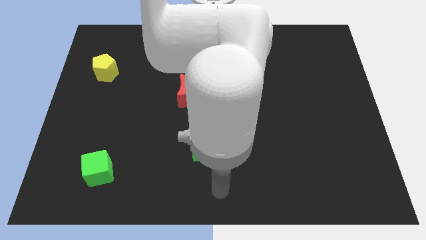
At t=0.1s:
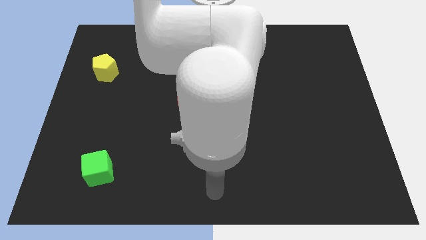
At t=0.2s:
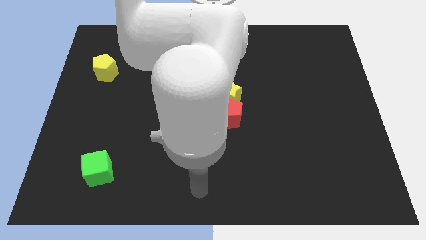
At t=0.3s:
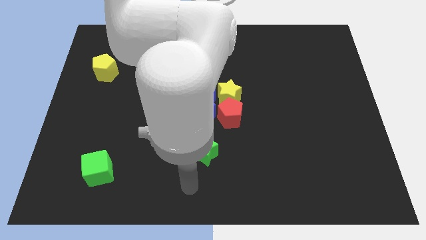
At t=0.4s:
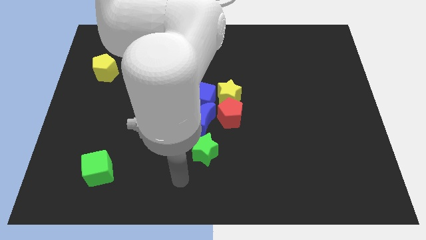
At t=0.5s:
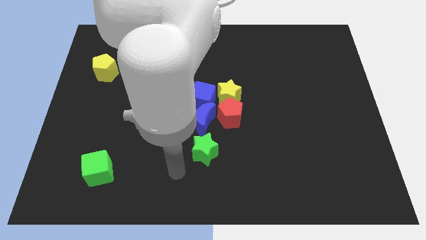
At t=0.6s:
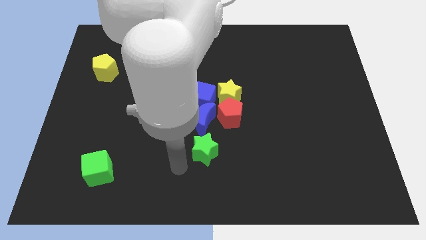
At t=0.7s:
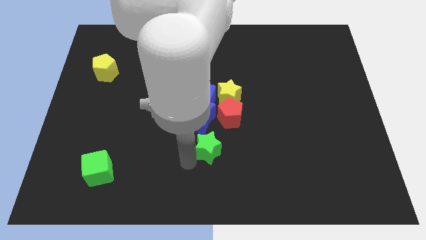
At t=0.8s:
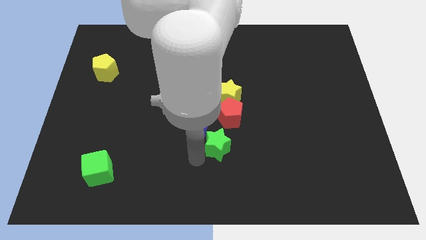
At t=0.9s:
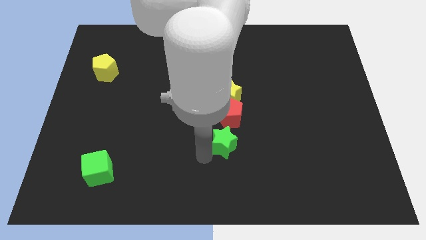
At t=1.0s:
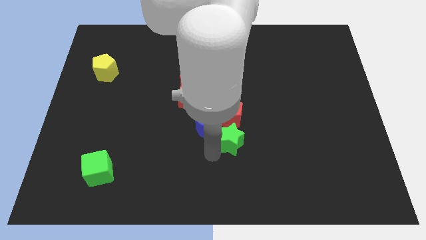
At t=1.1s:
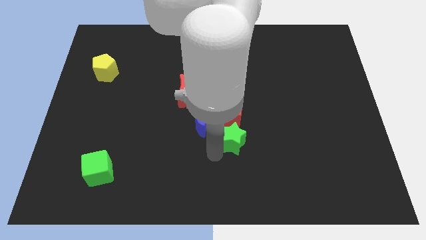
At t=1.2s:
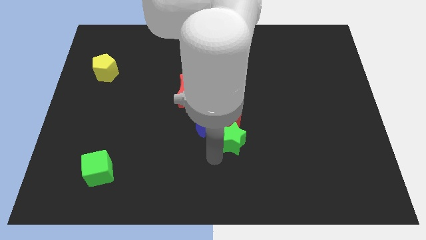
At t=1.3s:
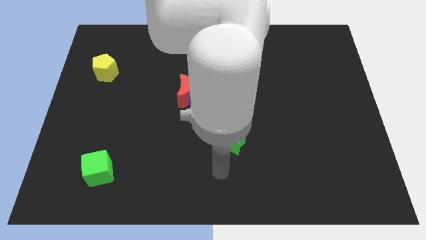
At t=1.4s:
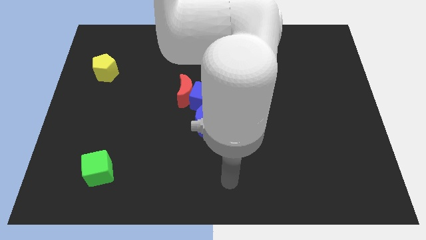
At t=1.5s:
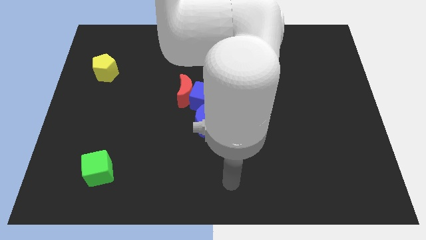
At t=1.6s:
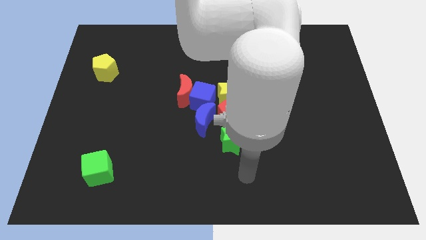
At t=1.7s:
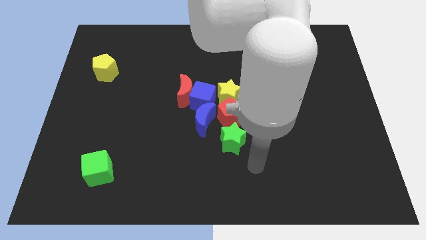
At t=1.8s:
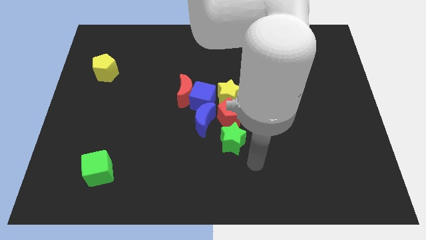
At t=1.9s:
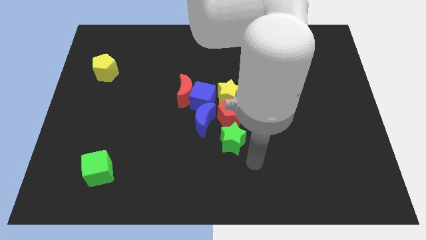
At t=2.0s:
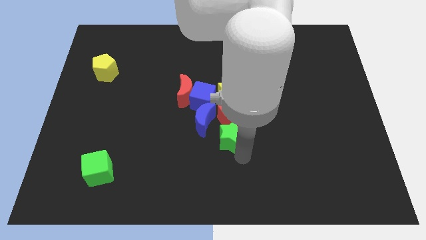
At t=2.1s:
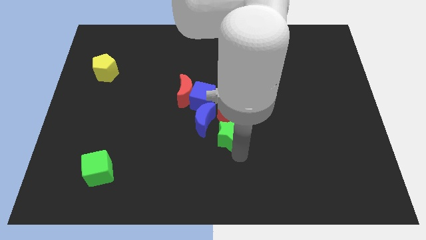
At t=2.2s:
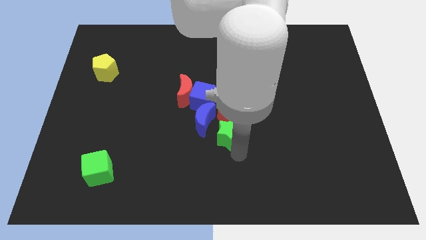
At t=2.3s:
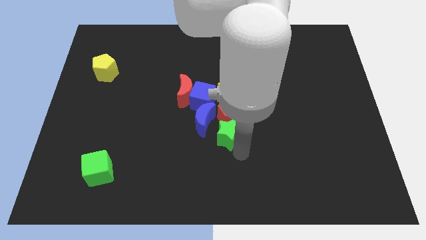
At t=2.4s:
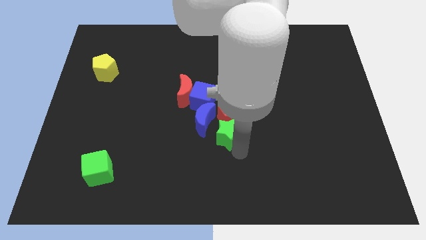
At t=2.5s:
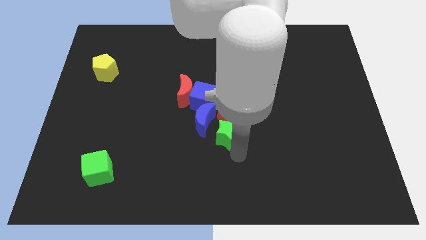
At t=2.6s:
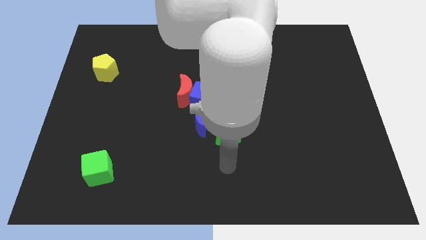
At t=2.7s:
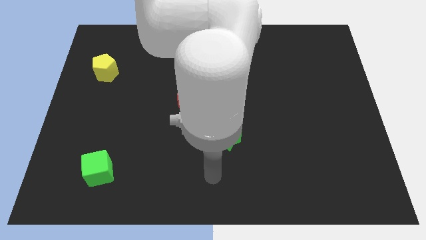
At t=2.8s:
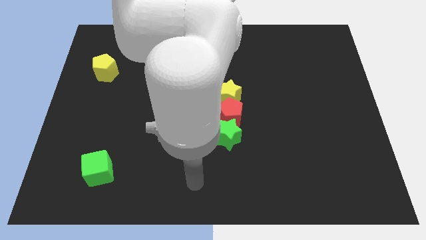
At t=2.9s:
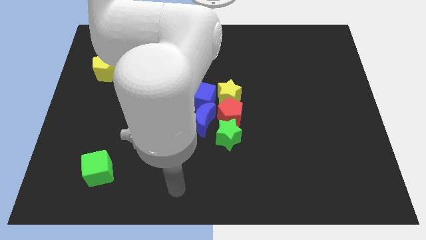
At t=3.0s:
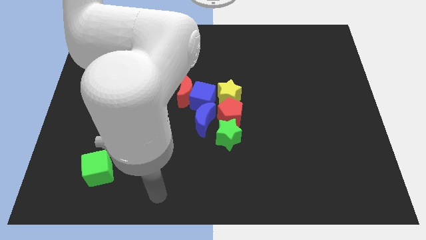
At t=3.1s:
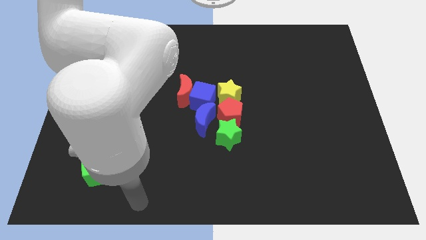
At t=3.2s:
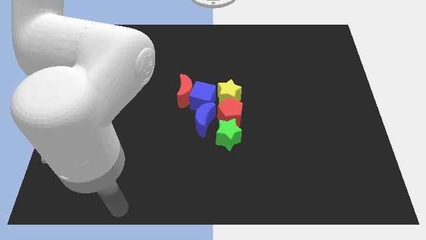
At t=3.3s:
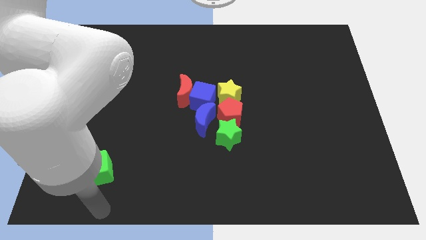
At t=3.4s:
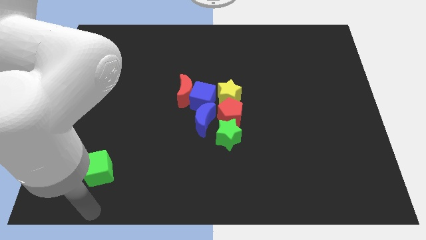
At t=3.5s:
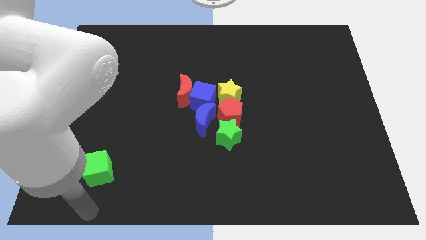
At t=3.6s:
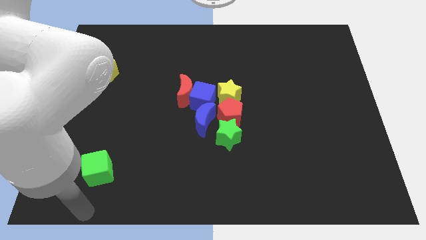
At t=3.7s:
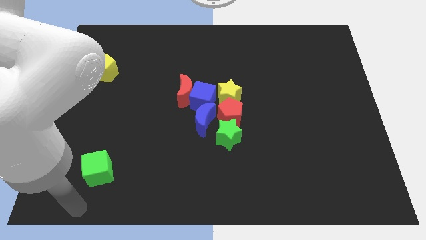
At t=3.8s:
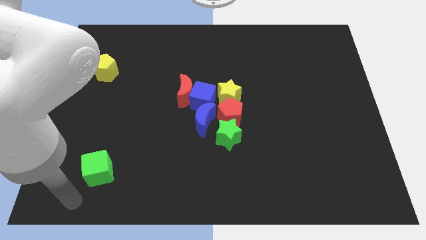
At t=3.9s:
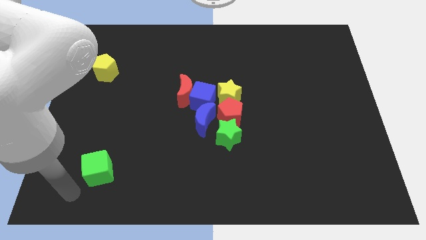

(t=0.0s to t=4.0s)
place the green star below the red pentagon

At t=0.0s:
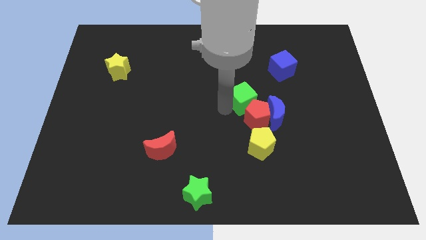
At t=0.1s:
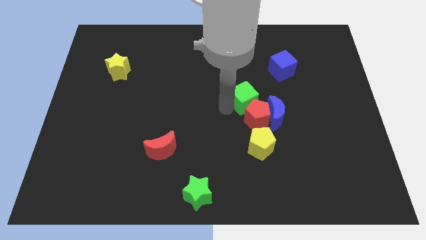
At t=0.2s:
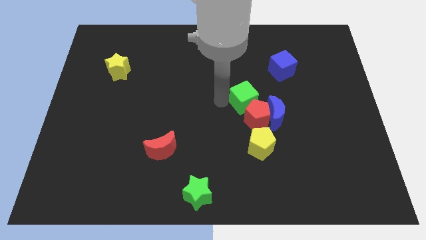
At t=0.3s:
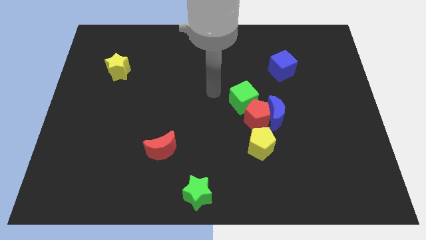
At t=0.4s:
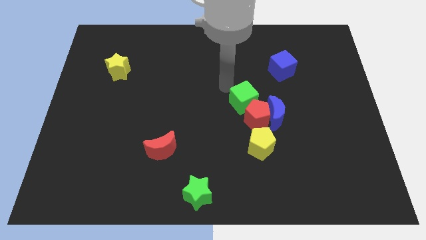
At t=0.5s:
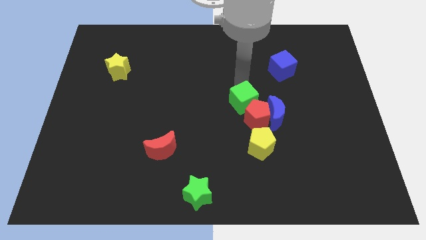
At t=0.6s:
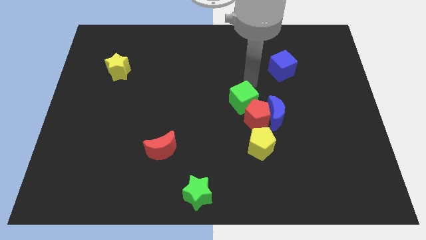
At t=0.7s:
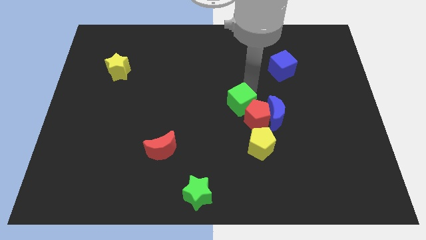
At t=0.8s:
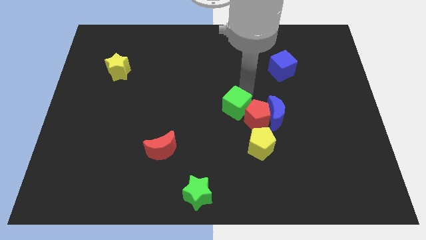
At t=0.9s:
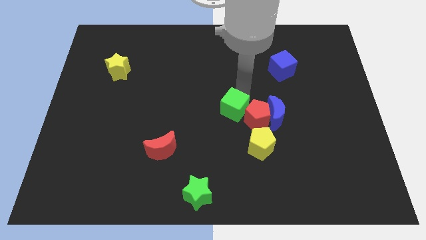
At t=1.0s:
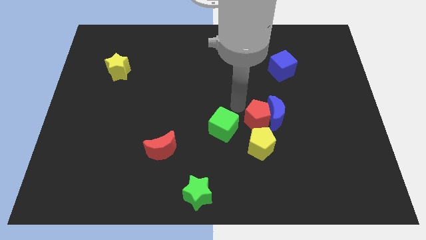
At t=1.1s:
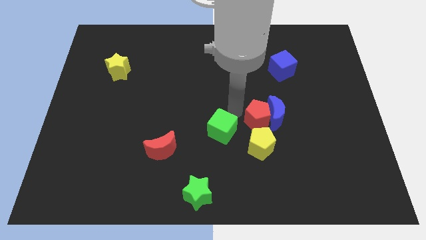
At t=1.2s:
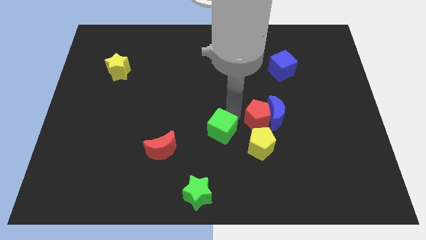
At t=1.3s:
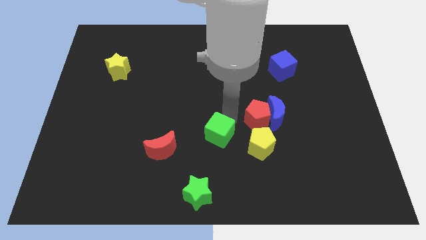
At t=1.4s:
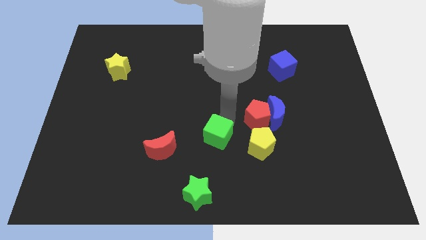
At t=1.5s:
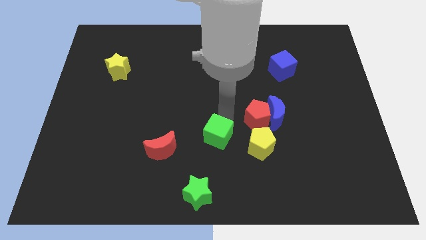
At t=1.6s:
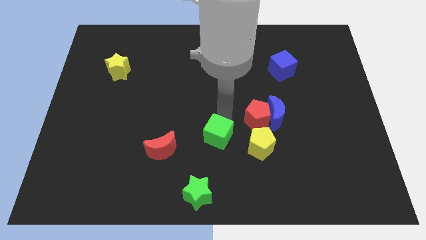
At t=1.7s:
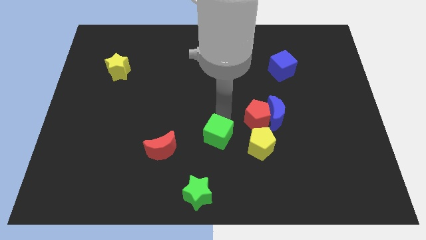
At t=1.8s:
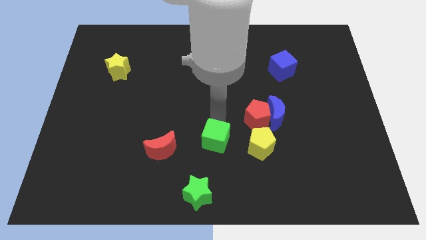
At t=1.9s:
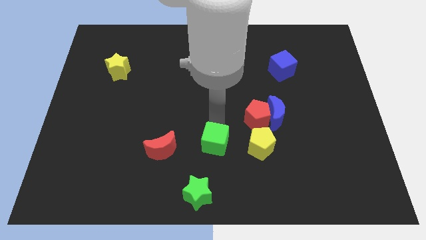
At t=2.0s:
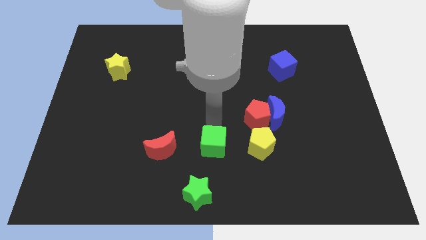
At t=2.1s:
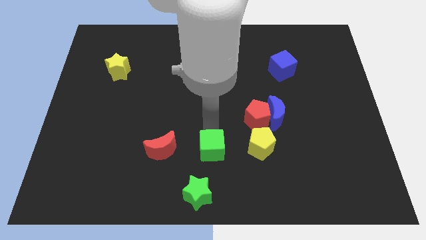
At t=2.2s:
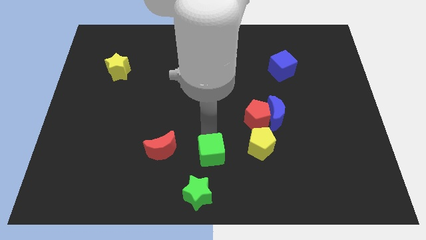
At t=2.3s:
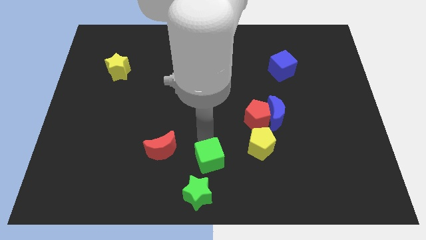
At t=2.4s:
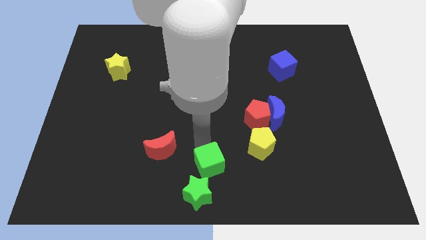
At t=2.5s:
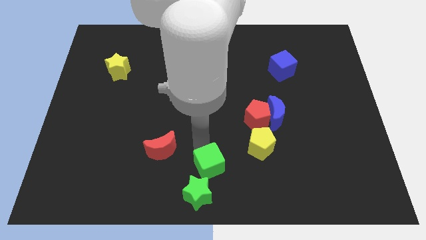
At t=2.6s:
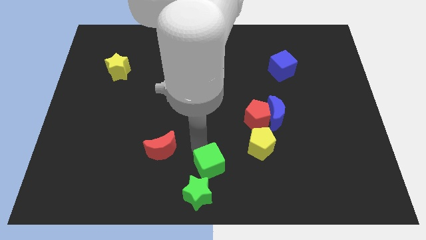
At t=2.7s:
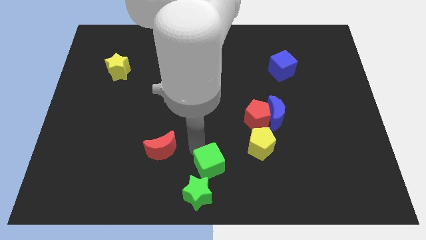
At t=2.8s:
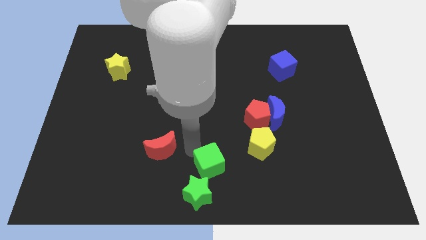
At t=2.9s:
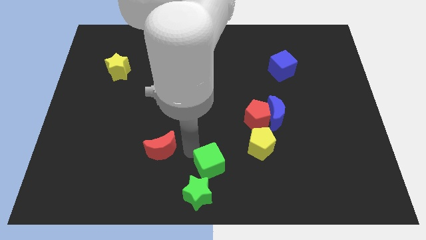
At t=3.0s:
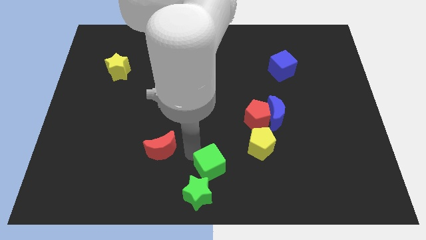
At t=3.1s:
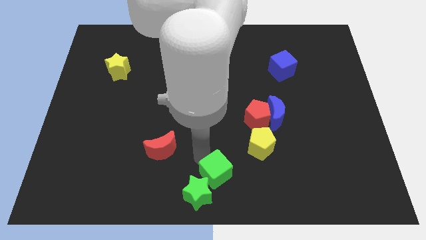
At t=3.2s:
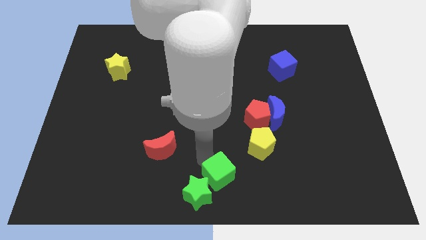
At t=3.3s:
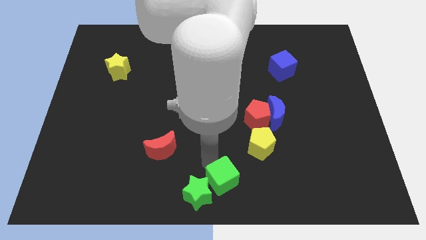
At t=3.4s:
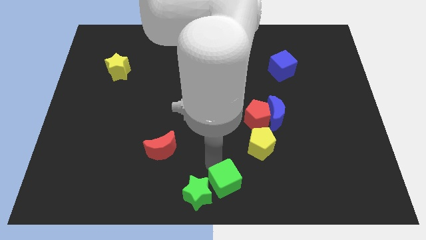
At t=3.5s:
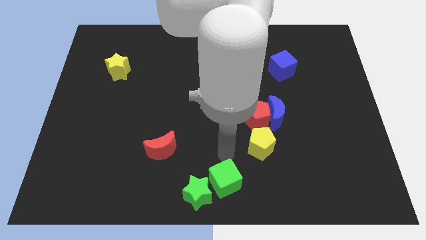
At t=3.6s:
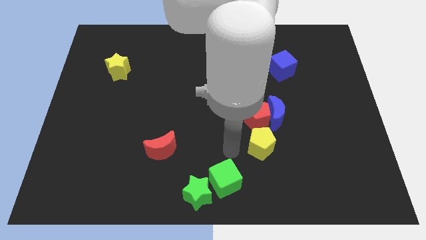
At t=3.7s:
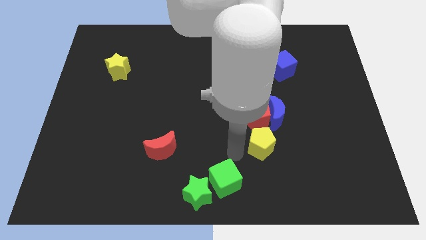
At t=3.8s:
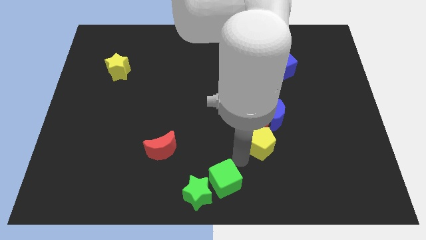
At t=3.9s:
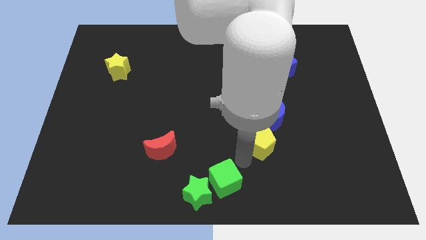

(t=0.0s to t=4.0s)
slide the green cube to the top right side of te green star

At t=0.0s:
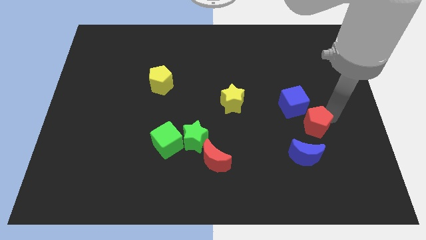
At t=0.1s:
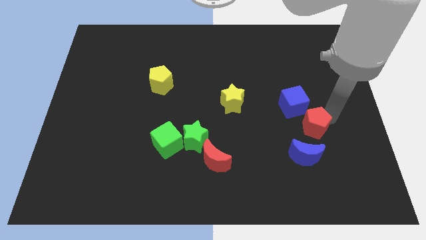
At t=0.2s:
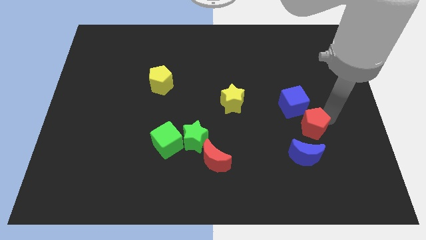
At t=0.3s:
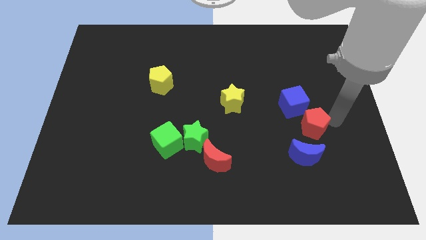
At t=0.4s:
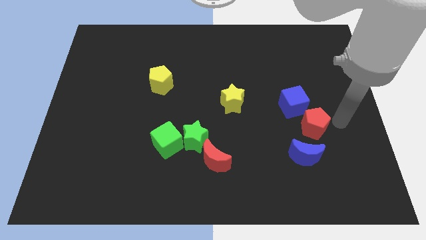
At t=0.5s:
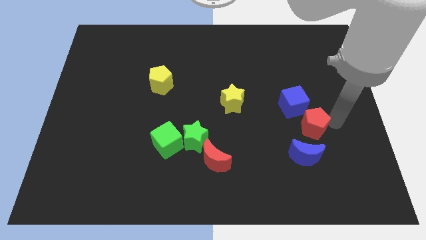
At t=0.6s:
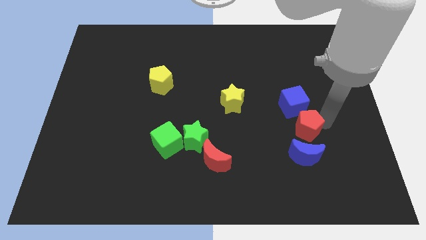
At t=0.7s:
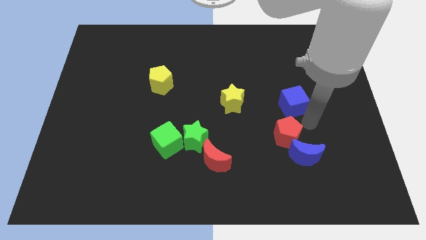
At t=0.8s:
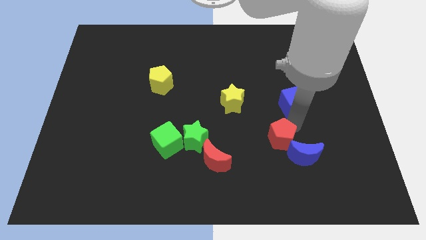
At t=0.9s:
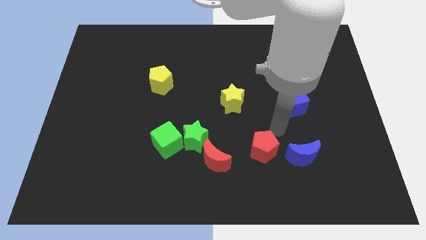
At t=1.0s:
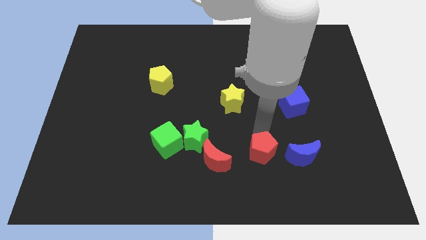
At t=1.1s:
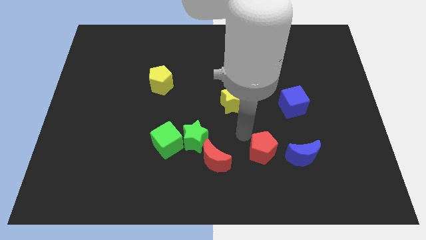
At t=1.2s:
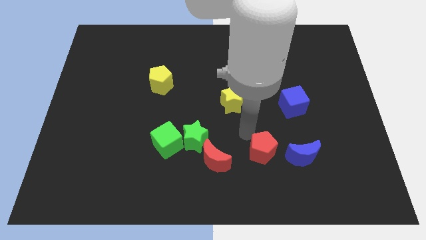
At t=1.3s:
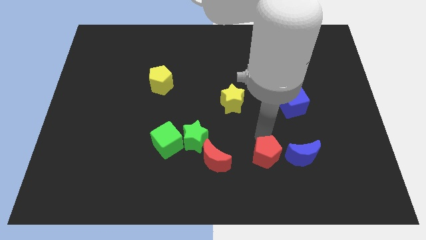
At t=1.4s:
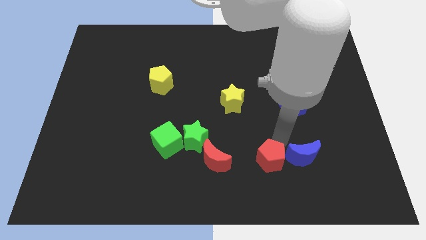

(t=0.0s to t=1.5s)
move the red pentagon left to the blue moon
